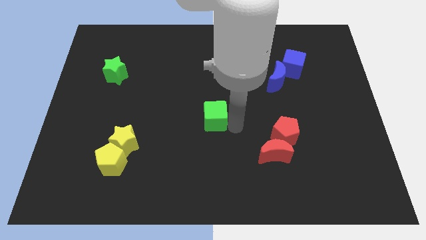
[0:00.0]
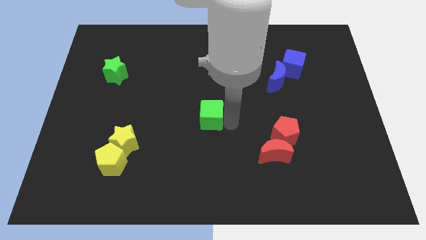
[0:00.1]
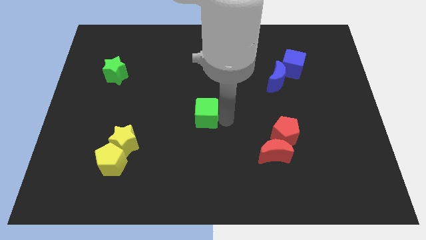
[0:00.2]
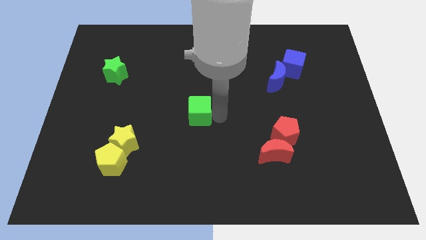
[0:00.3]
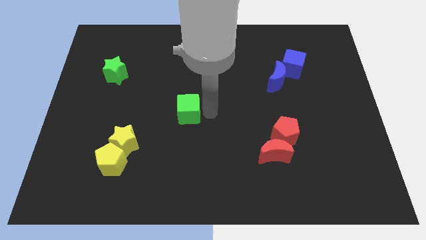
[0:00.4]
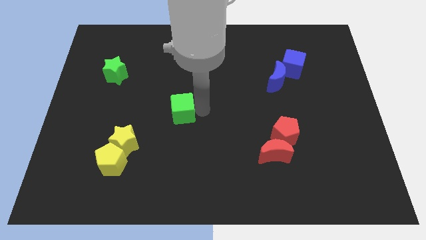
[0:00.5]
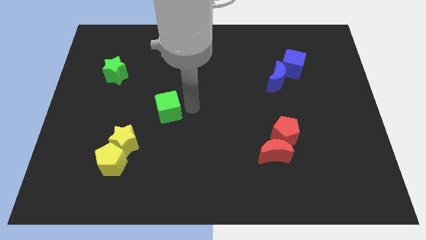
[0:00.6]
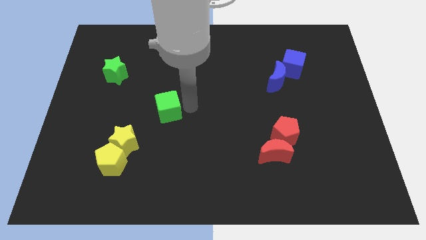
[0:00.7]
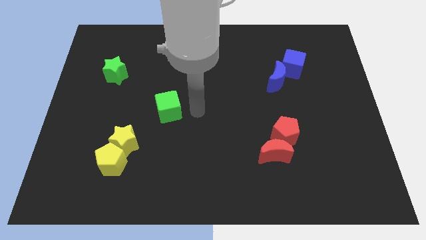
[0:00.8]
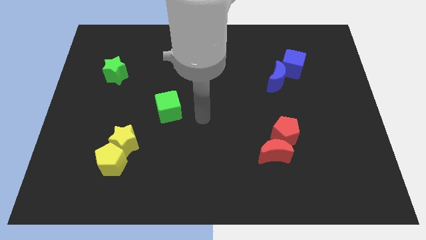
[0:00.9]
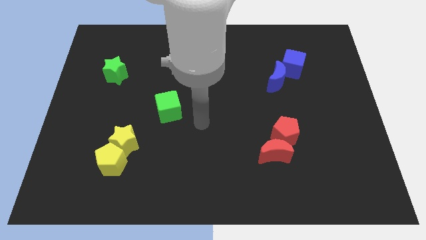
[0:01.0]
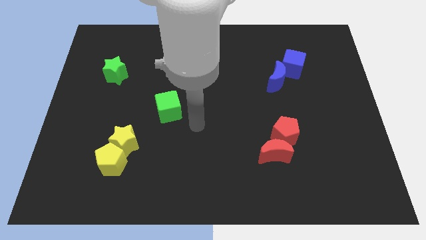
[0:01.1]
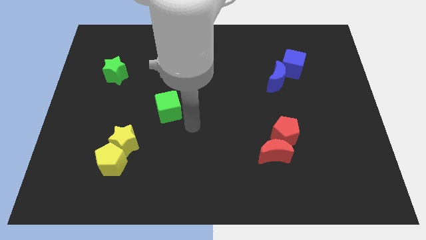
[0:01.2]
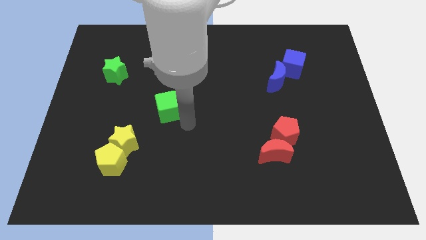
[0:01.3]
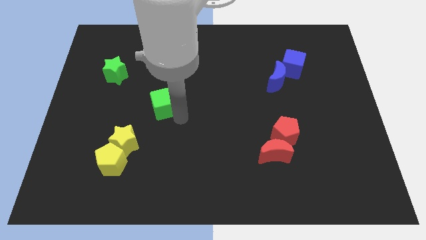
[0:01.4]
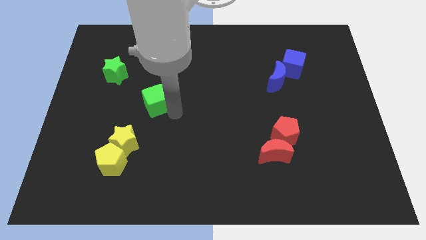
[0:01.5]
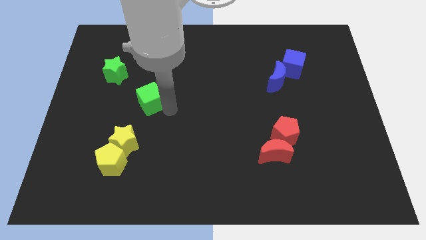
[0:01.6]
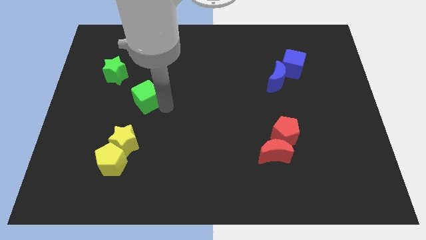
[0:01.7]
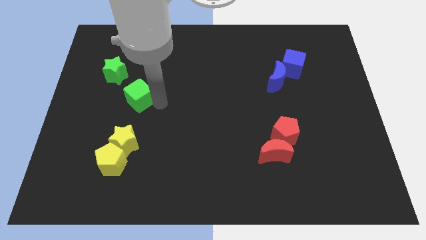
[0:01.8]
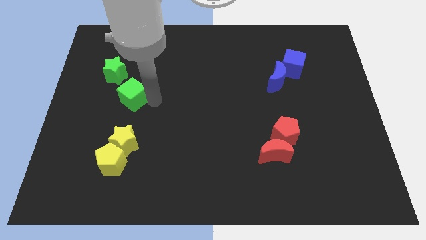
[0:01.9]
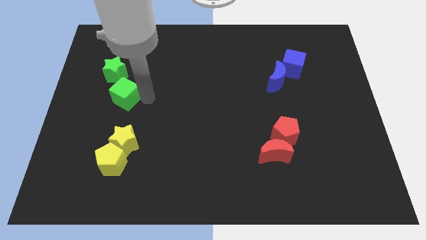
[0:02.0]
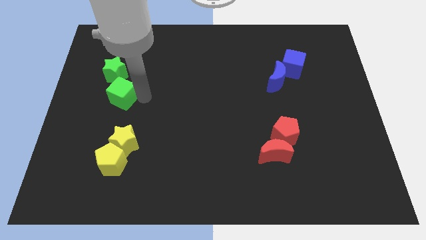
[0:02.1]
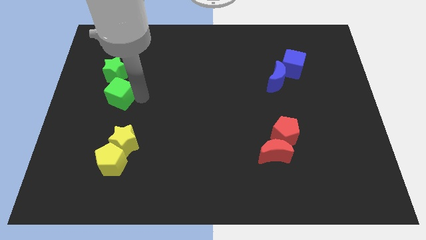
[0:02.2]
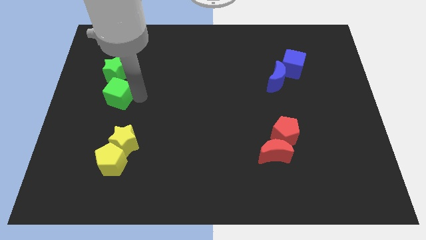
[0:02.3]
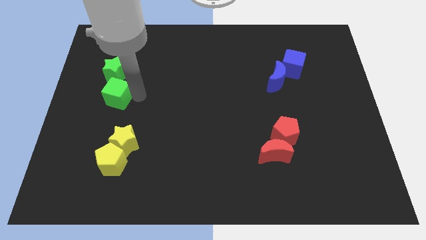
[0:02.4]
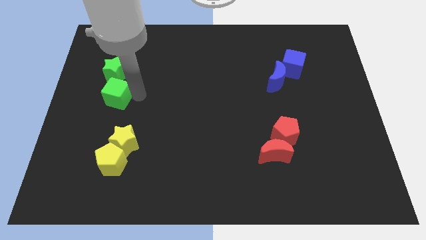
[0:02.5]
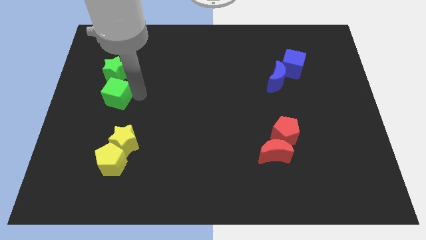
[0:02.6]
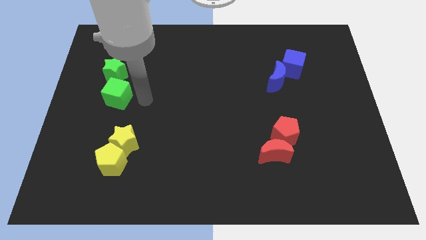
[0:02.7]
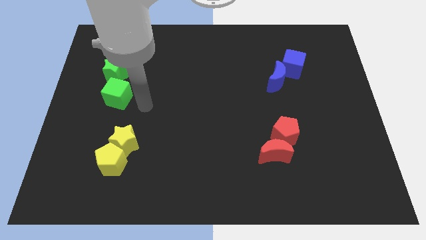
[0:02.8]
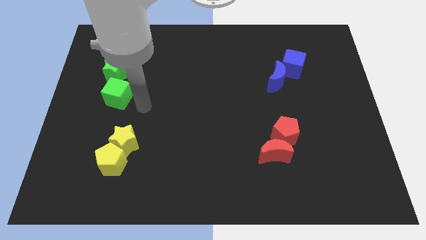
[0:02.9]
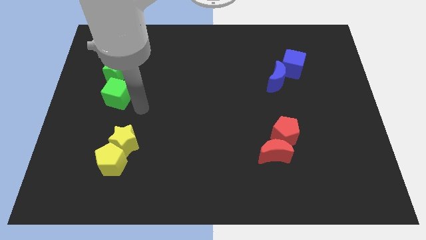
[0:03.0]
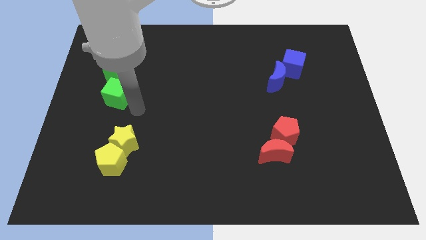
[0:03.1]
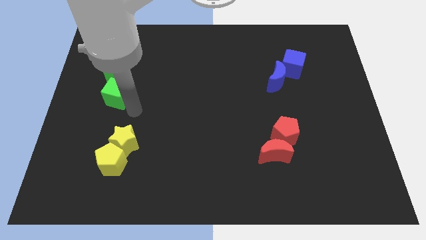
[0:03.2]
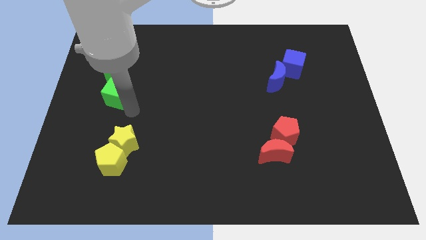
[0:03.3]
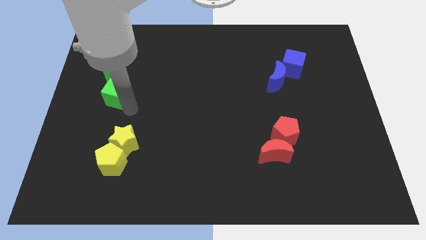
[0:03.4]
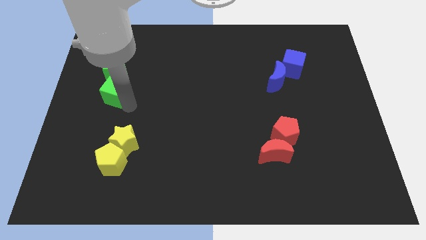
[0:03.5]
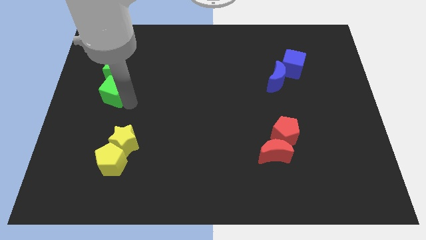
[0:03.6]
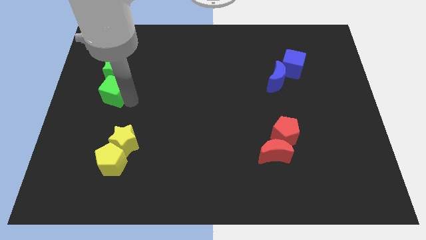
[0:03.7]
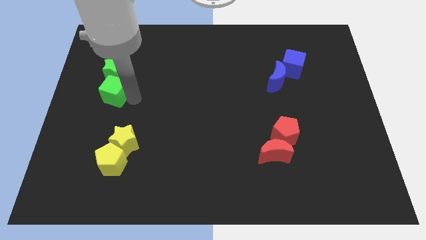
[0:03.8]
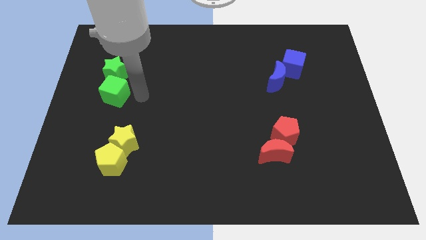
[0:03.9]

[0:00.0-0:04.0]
place the green cube towards the green star

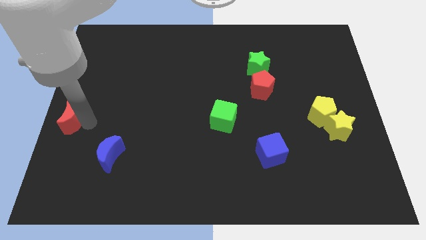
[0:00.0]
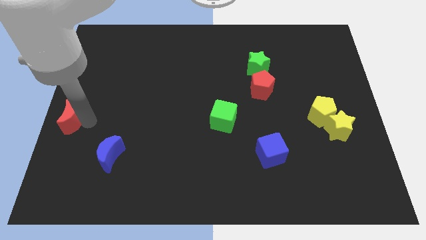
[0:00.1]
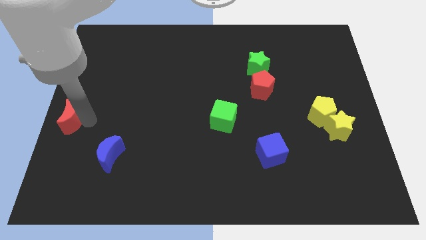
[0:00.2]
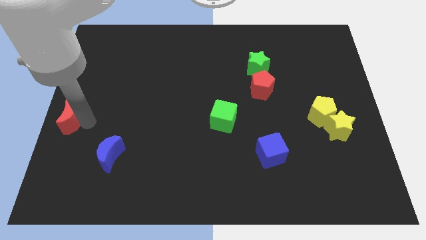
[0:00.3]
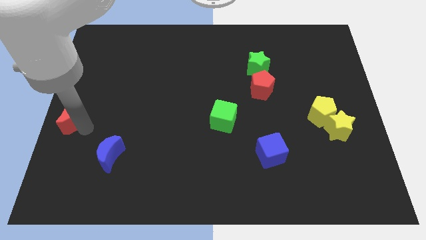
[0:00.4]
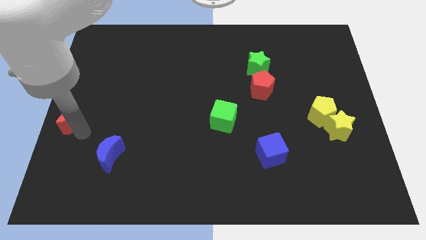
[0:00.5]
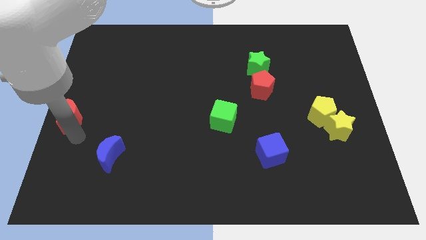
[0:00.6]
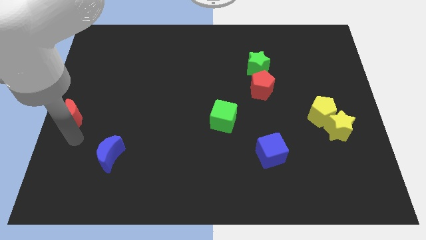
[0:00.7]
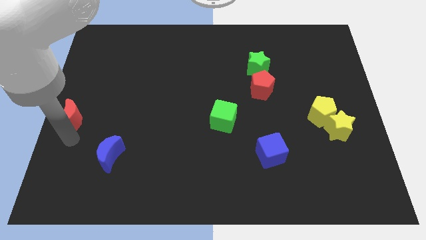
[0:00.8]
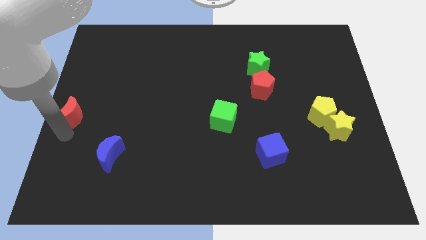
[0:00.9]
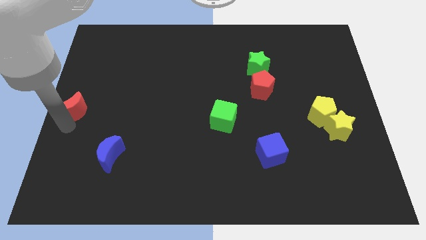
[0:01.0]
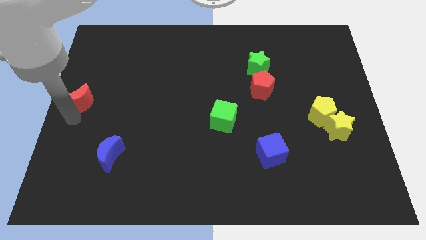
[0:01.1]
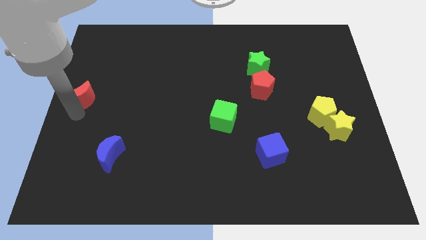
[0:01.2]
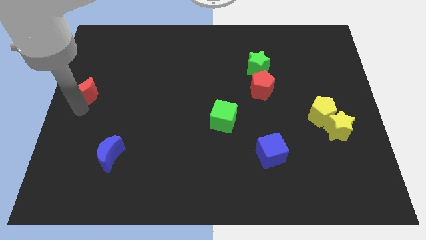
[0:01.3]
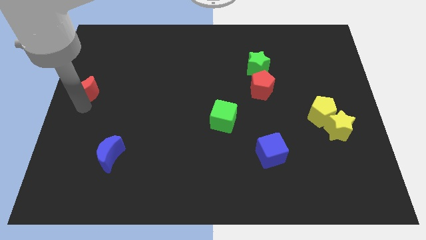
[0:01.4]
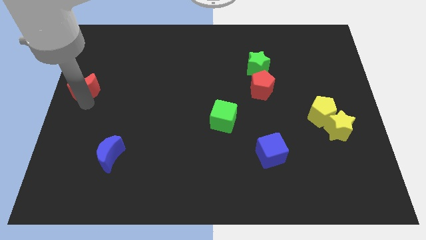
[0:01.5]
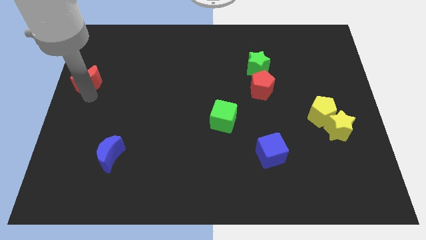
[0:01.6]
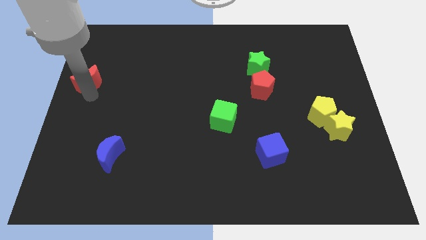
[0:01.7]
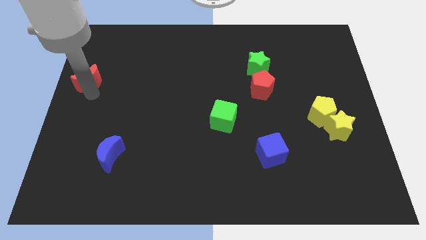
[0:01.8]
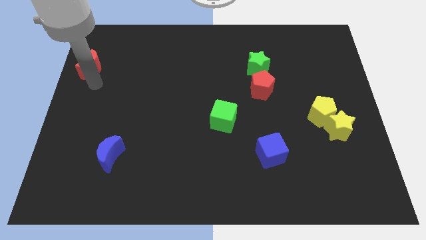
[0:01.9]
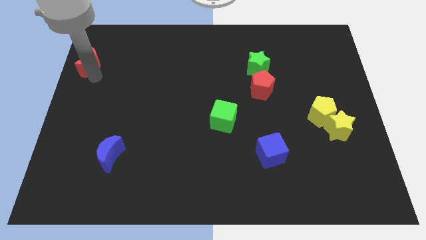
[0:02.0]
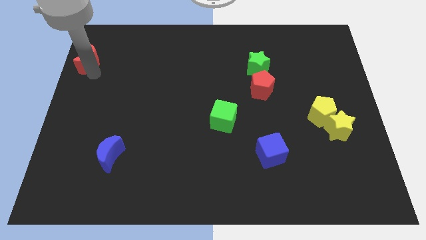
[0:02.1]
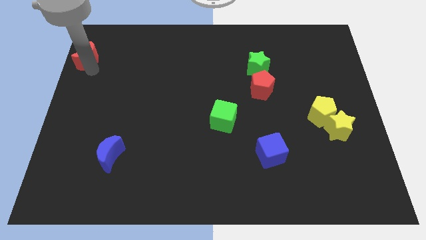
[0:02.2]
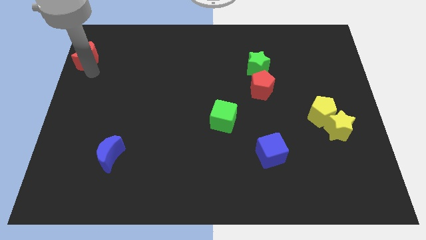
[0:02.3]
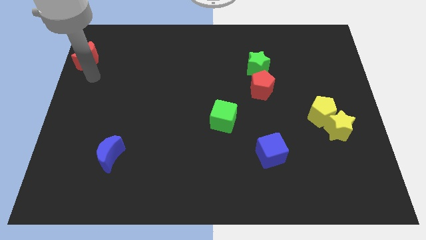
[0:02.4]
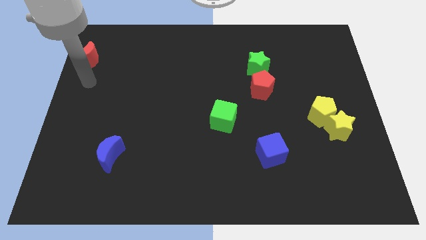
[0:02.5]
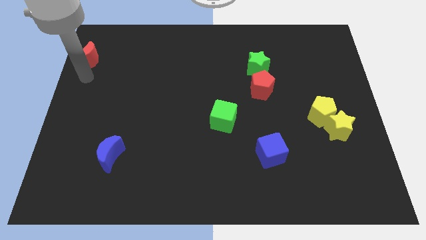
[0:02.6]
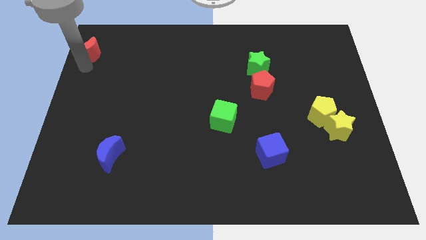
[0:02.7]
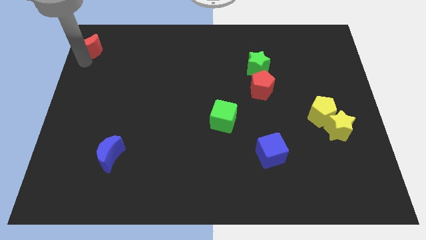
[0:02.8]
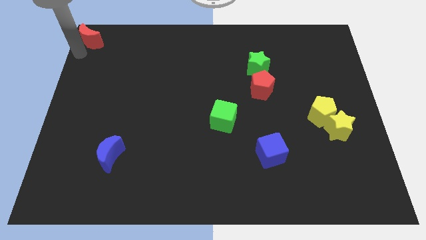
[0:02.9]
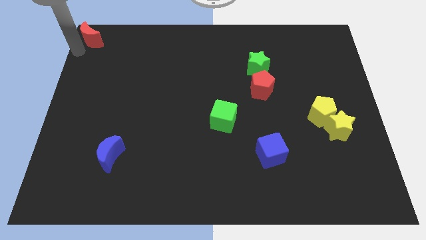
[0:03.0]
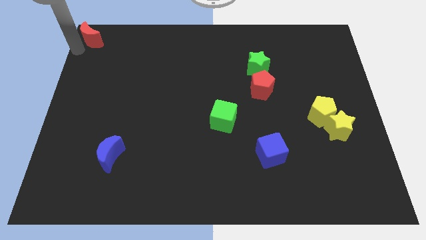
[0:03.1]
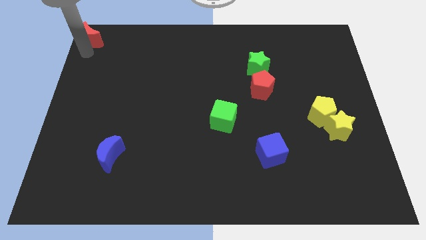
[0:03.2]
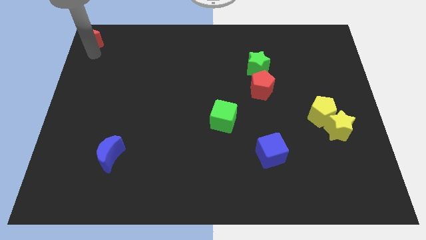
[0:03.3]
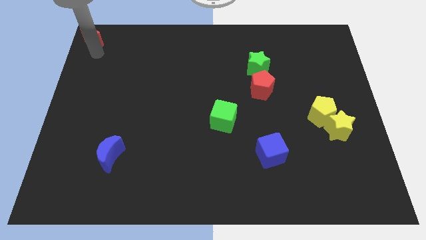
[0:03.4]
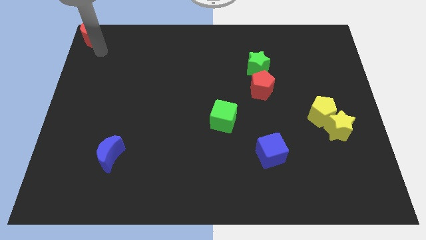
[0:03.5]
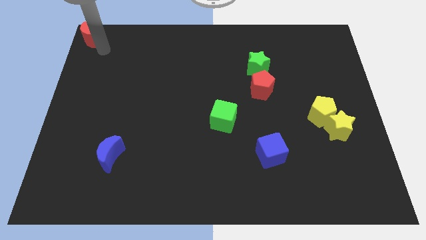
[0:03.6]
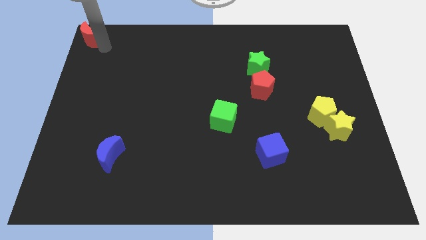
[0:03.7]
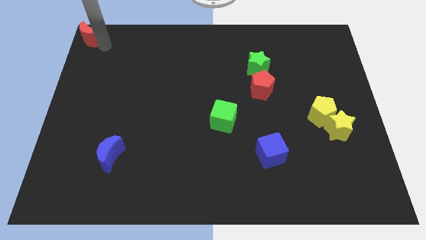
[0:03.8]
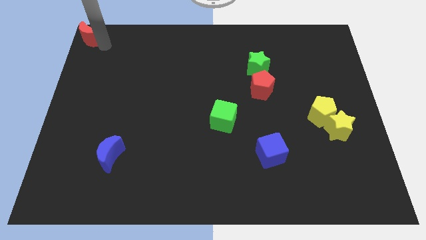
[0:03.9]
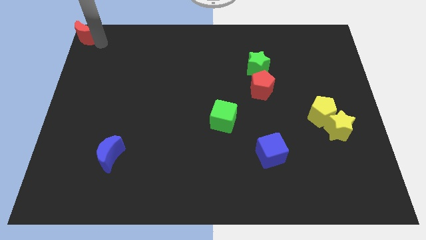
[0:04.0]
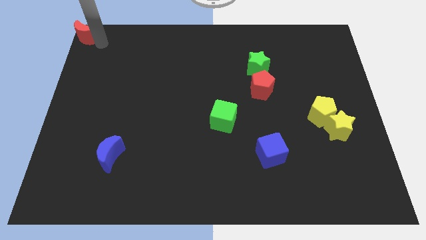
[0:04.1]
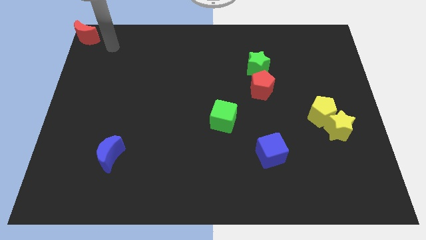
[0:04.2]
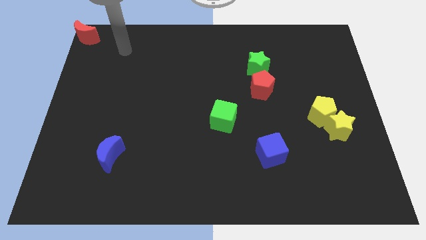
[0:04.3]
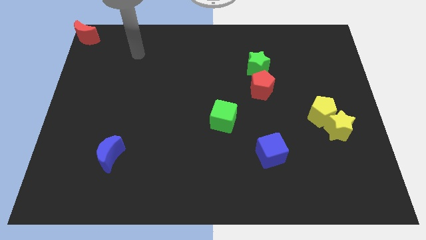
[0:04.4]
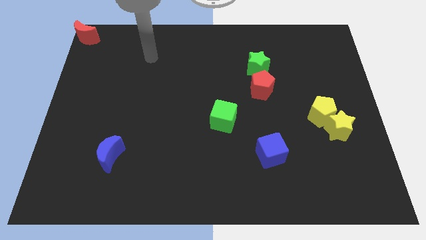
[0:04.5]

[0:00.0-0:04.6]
move the red crescent to the top left corner of the board

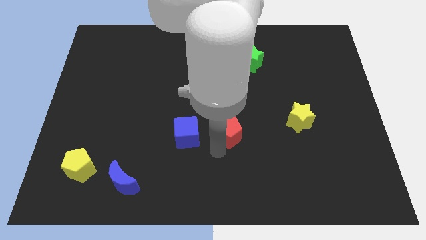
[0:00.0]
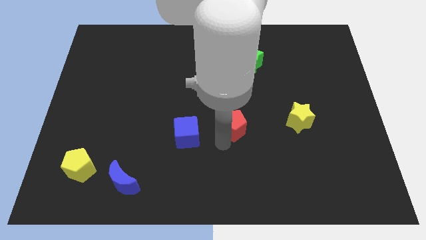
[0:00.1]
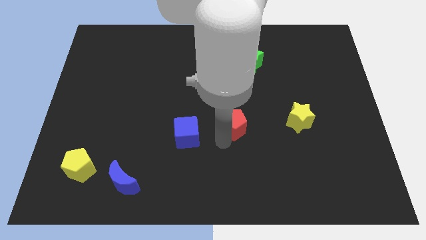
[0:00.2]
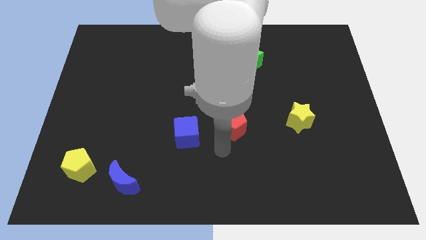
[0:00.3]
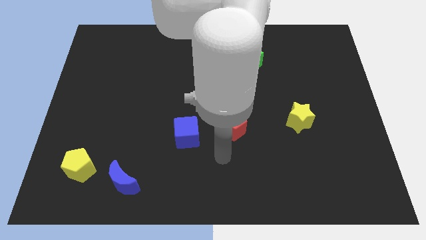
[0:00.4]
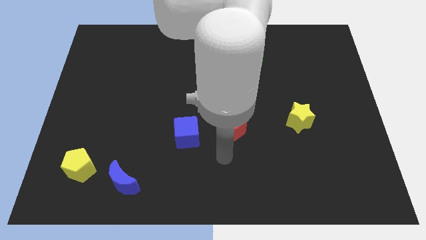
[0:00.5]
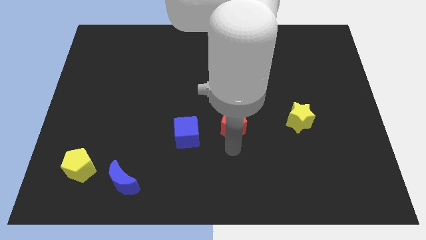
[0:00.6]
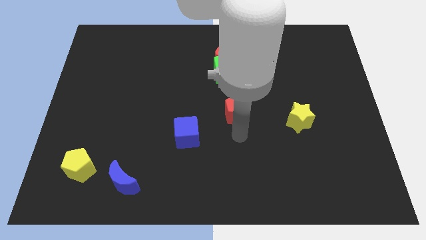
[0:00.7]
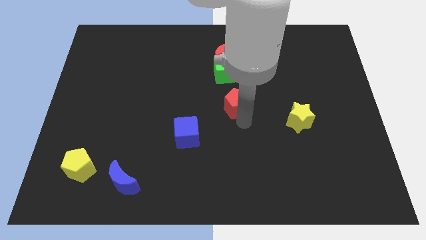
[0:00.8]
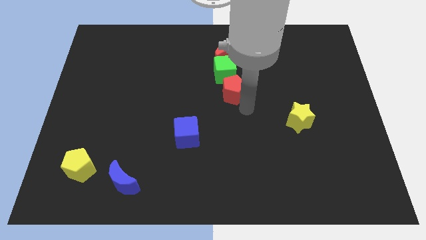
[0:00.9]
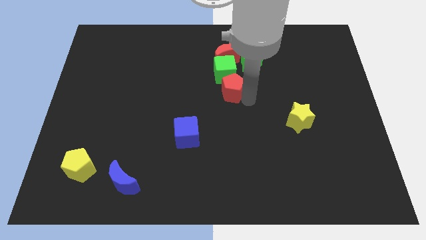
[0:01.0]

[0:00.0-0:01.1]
place the red pentgaon at the bottom of the green cube
